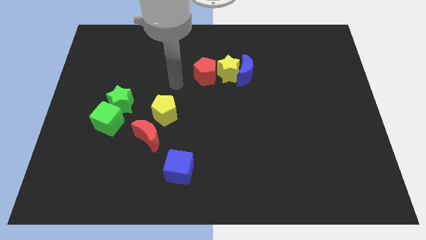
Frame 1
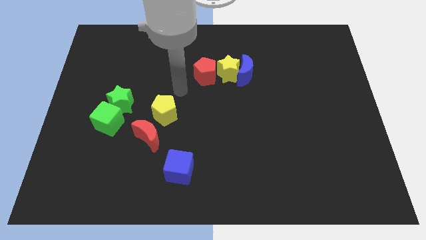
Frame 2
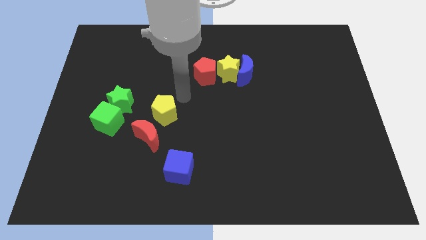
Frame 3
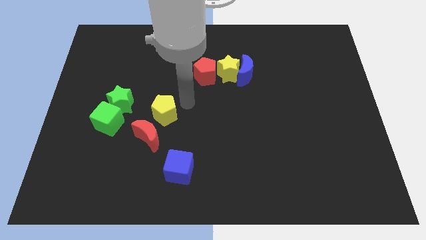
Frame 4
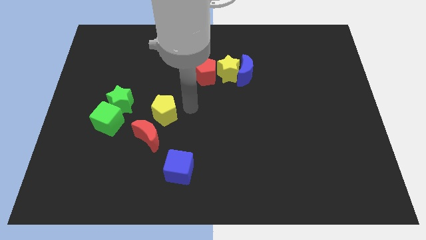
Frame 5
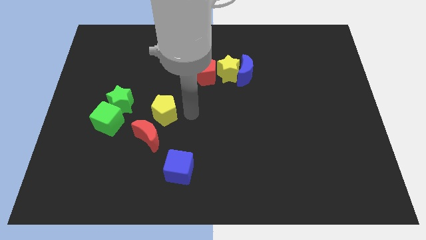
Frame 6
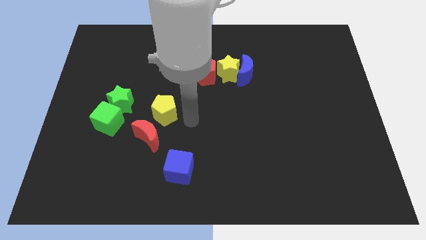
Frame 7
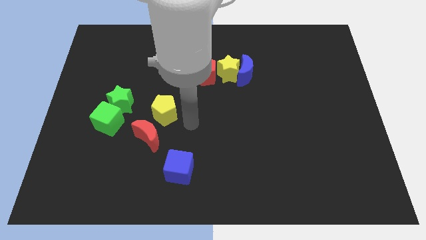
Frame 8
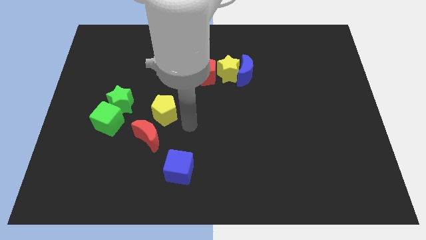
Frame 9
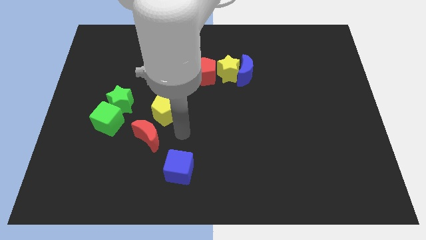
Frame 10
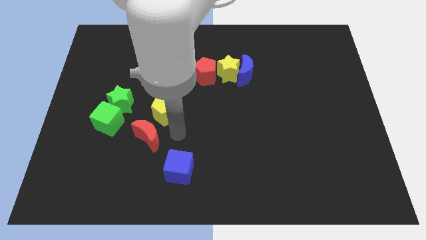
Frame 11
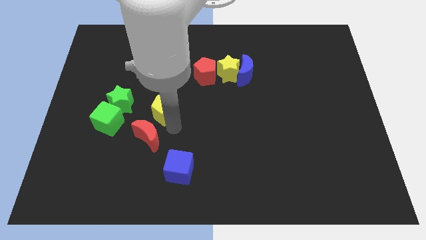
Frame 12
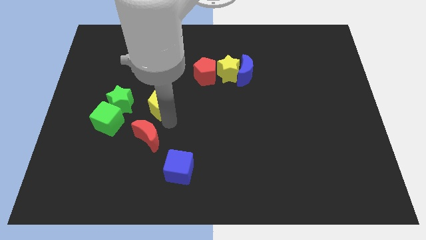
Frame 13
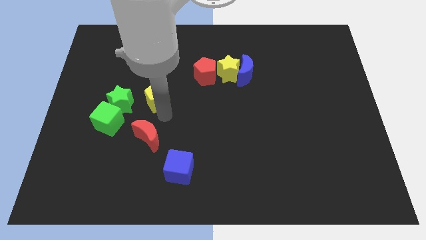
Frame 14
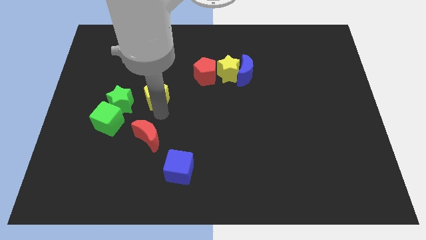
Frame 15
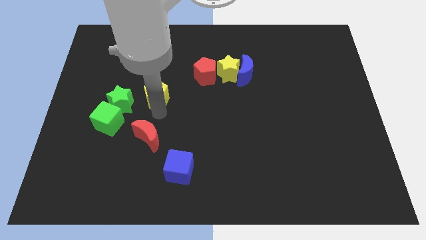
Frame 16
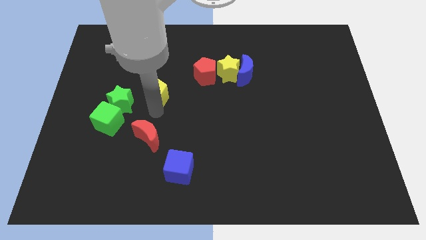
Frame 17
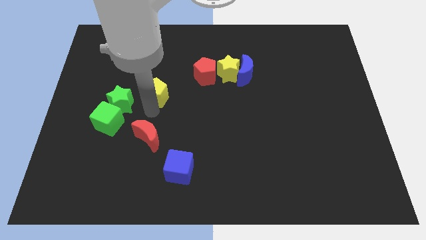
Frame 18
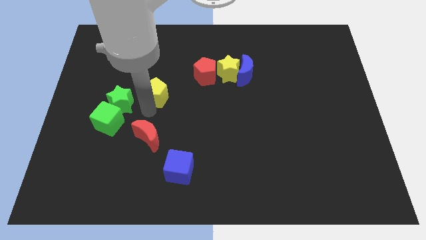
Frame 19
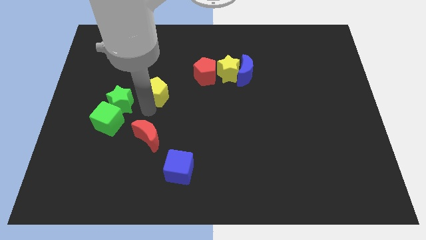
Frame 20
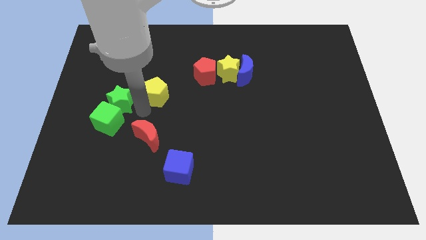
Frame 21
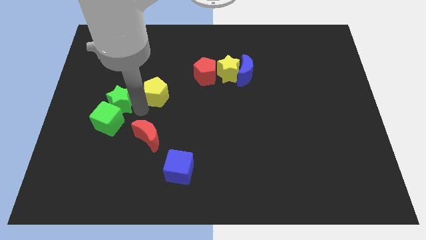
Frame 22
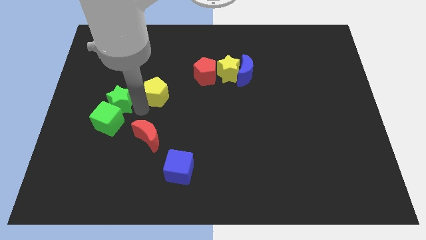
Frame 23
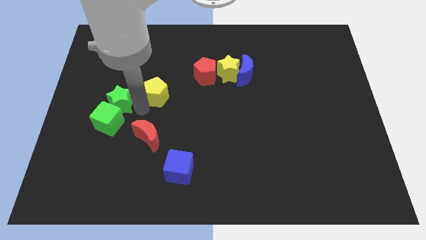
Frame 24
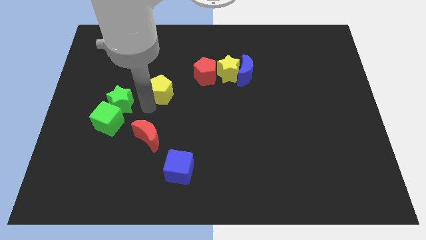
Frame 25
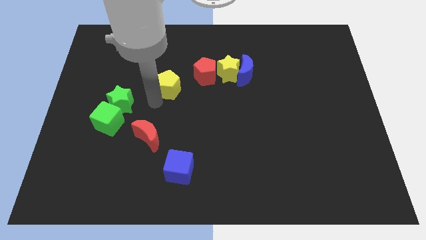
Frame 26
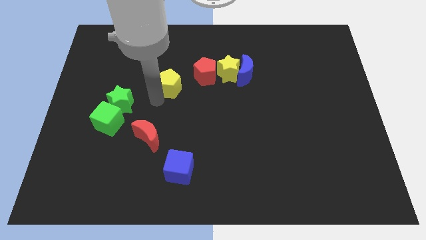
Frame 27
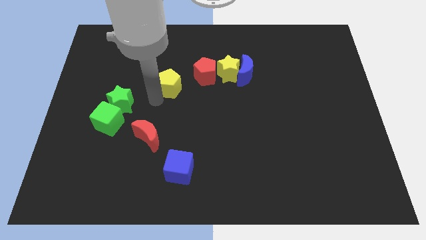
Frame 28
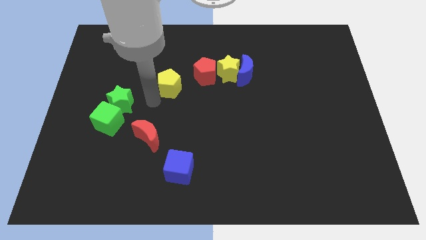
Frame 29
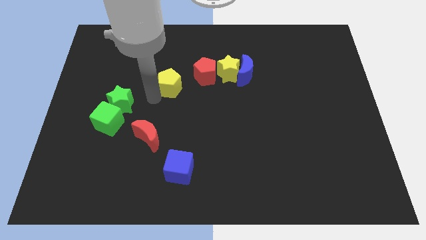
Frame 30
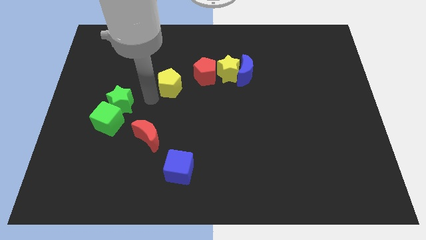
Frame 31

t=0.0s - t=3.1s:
slightly push the yellow pentagon towards the red pentagon

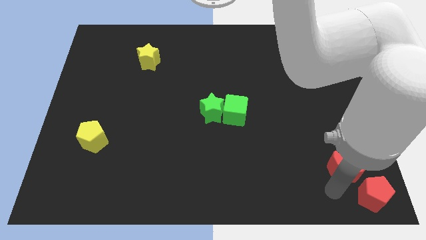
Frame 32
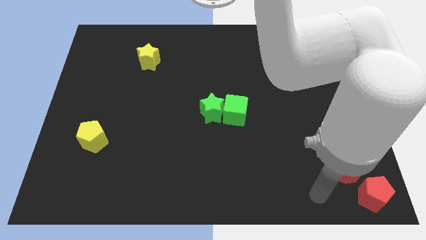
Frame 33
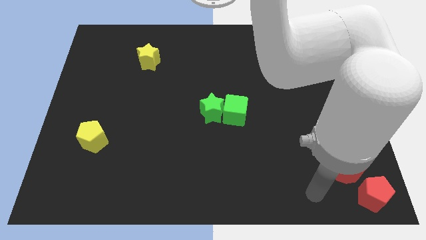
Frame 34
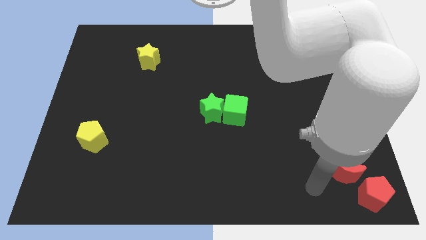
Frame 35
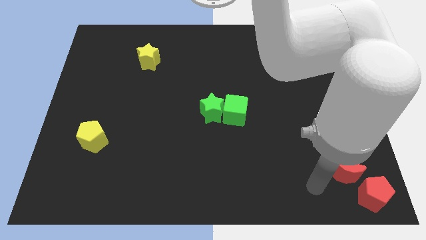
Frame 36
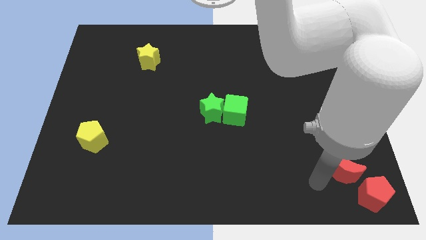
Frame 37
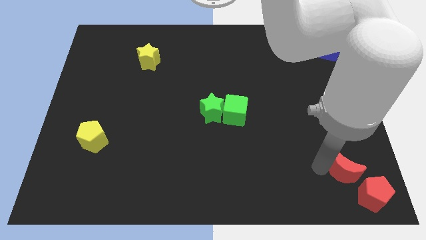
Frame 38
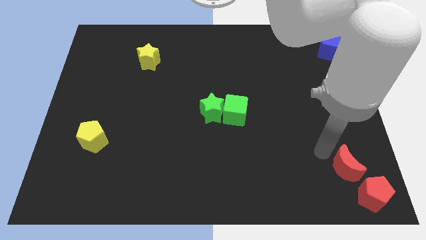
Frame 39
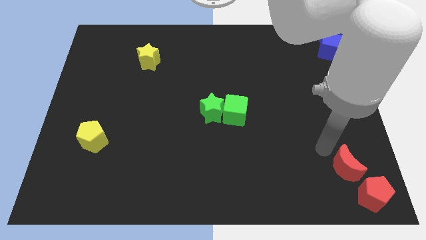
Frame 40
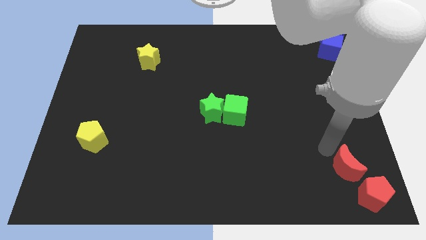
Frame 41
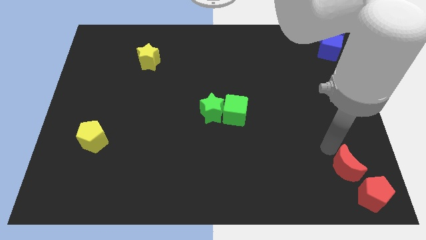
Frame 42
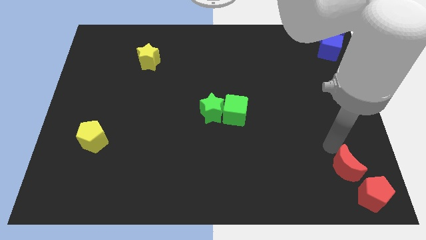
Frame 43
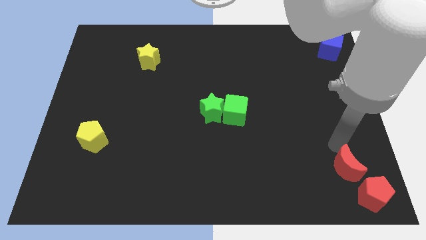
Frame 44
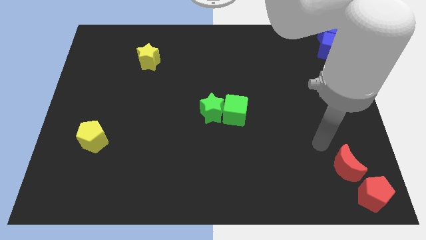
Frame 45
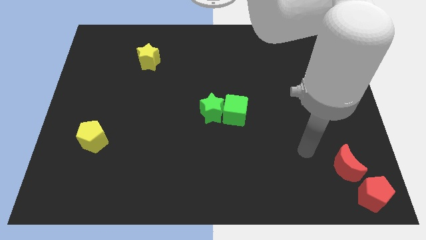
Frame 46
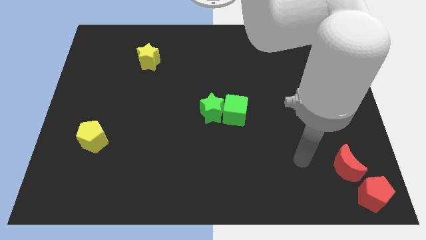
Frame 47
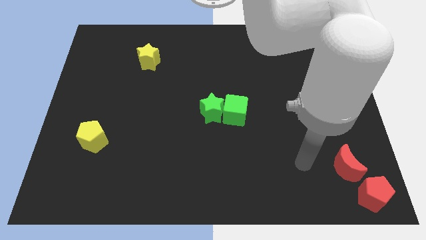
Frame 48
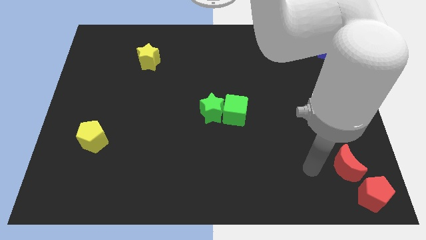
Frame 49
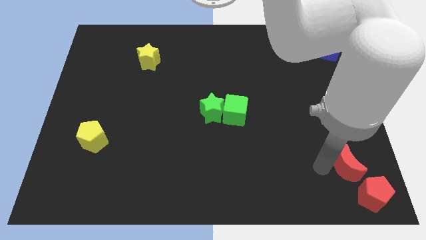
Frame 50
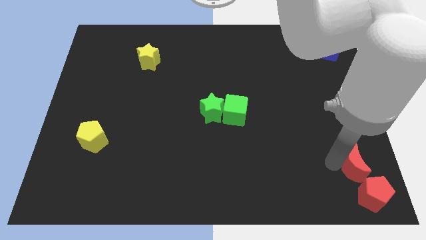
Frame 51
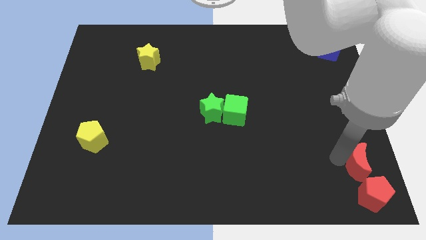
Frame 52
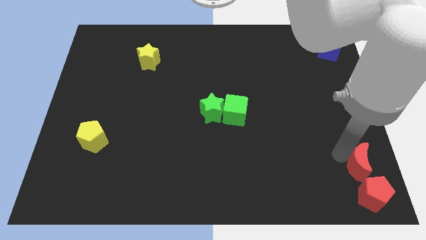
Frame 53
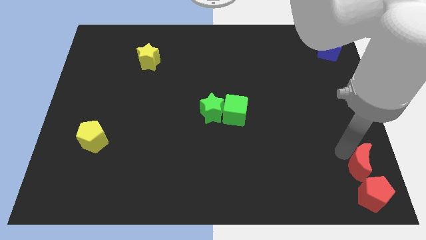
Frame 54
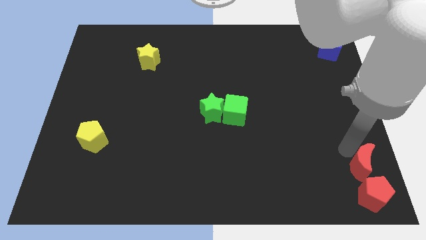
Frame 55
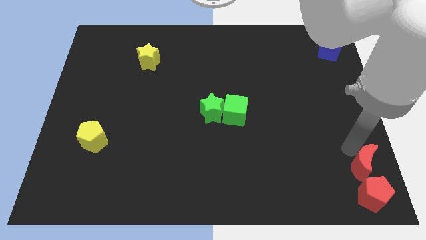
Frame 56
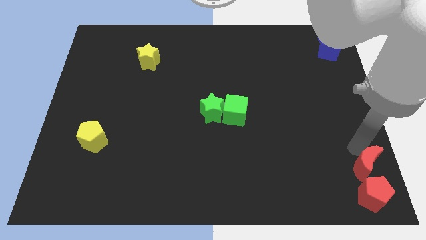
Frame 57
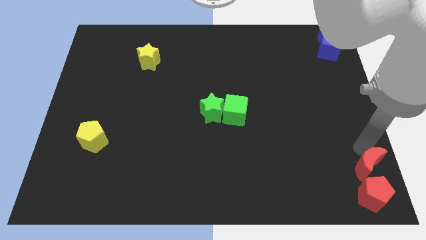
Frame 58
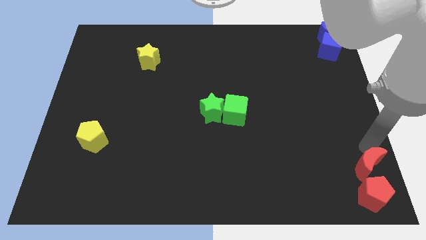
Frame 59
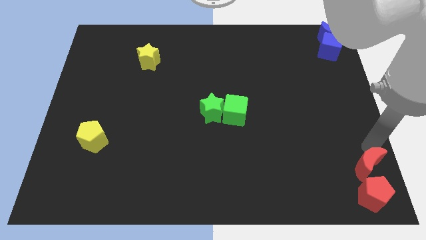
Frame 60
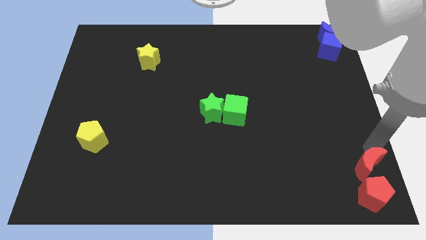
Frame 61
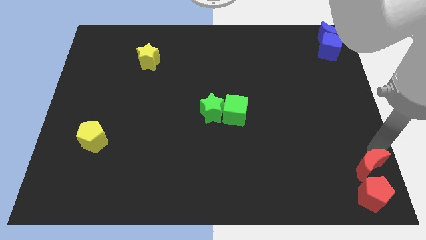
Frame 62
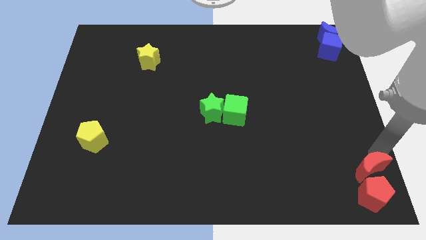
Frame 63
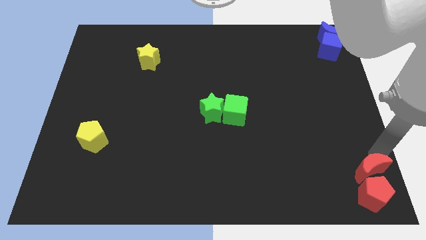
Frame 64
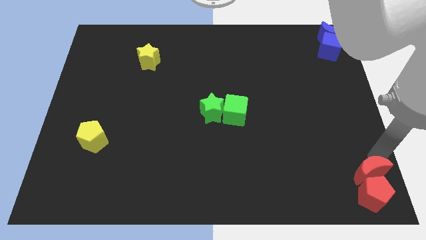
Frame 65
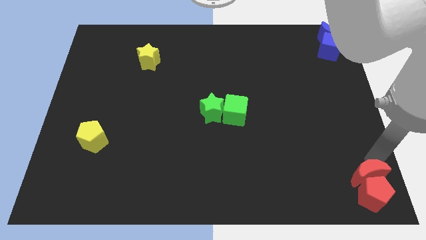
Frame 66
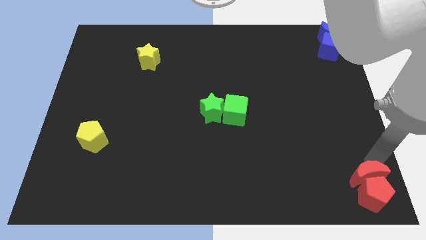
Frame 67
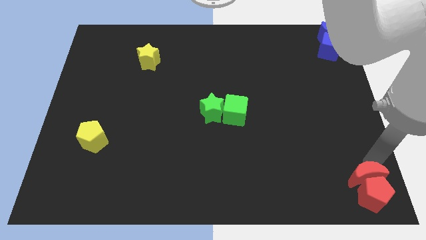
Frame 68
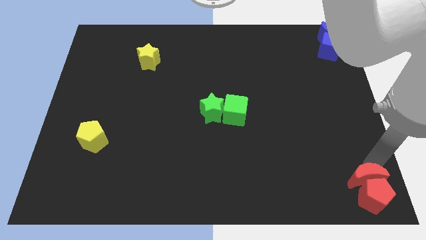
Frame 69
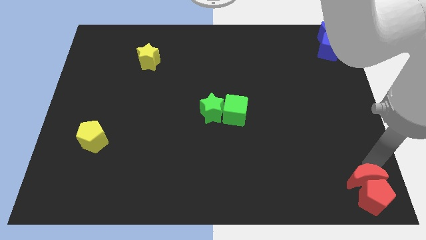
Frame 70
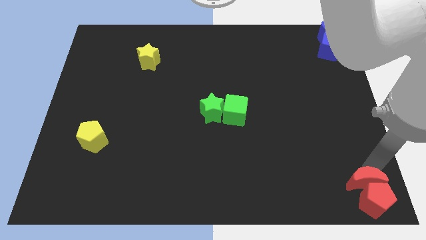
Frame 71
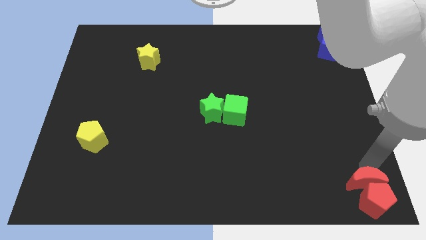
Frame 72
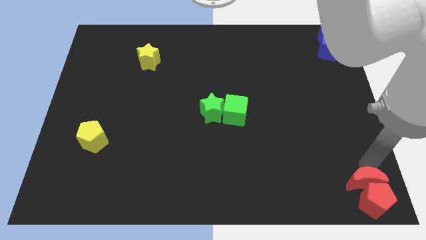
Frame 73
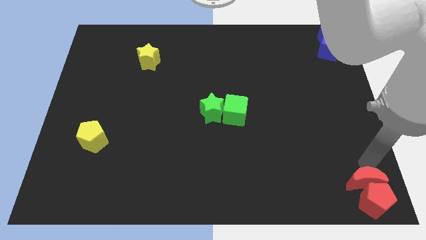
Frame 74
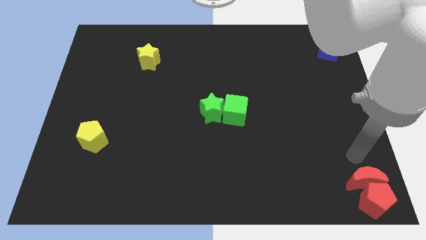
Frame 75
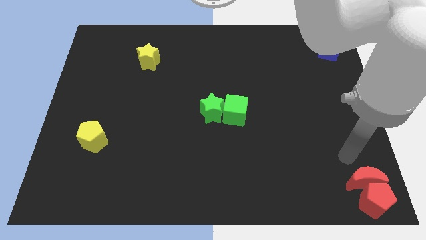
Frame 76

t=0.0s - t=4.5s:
place the red moon above the red pentagon

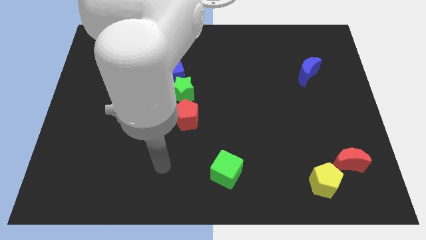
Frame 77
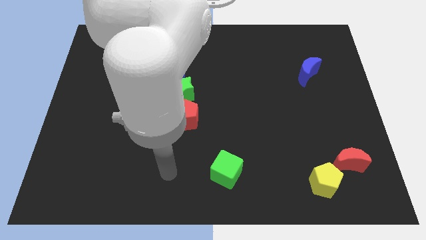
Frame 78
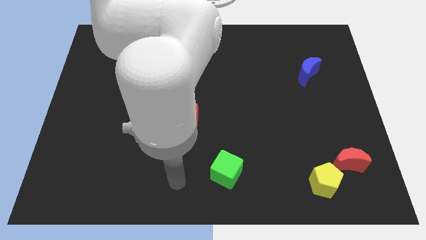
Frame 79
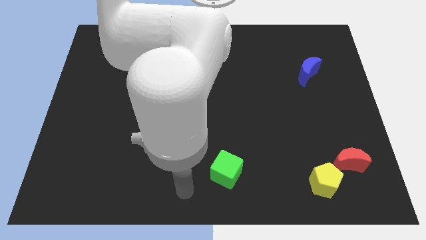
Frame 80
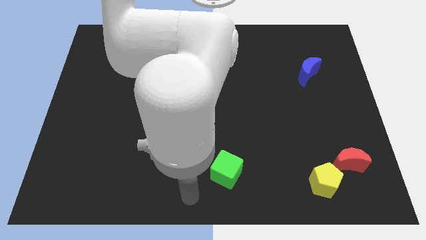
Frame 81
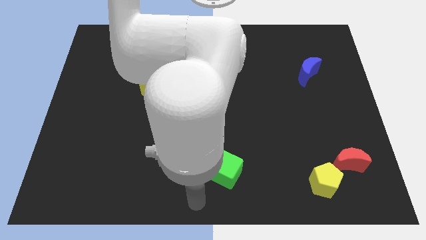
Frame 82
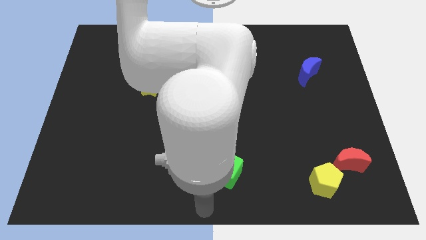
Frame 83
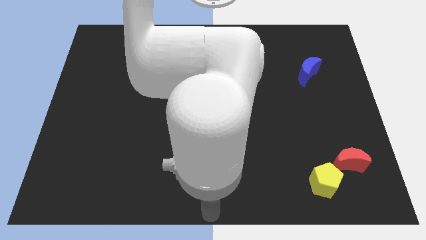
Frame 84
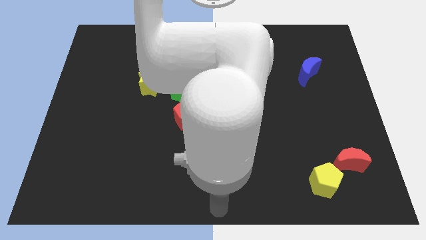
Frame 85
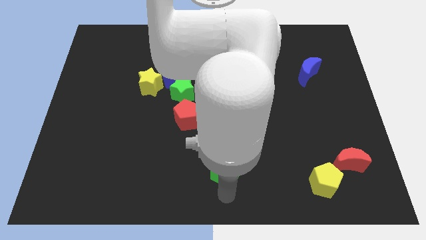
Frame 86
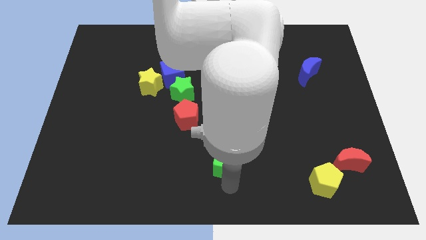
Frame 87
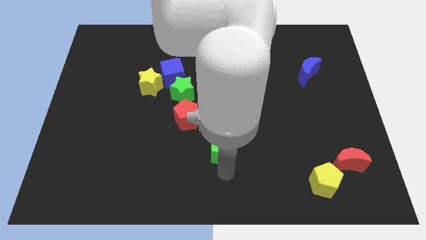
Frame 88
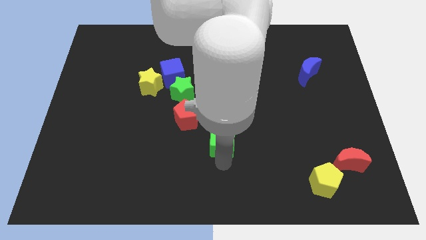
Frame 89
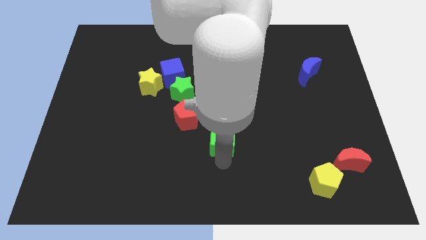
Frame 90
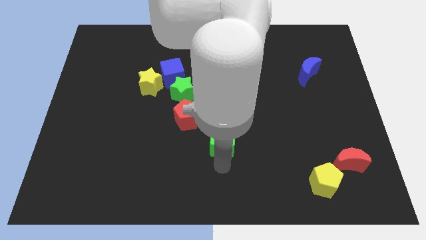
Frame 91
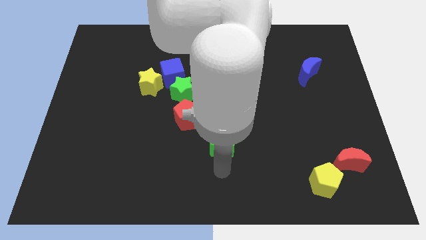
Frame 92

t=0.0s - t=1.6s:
move the green cube slightly up
